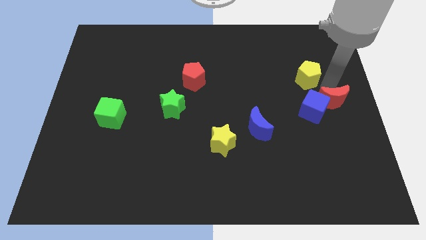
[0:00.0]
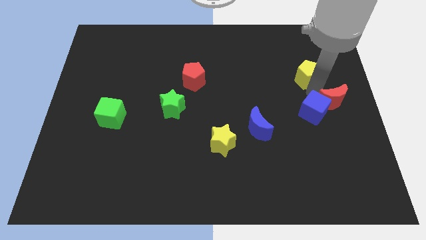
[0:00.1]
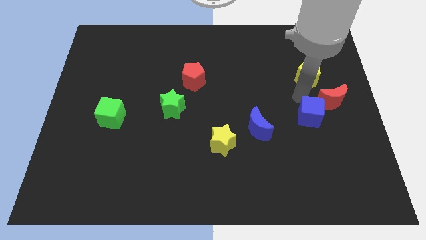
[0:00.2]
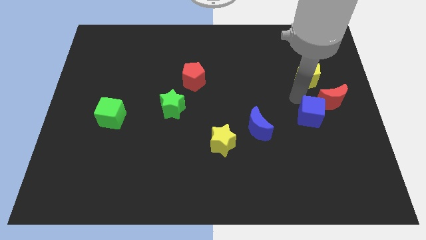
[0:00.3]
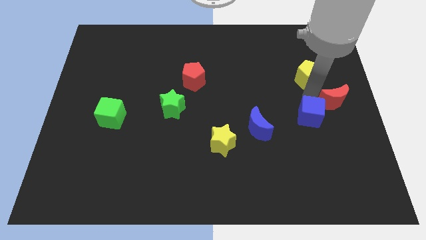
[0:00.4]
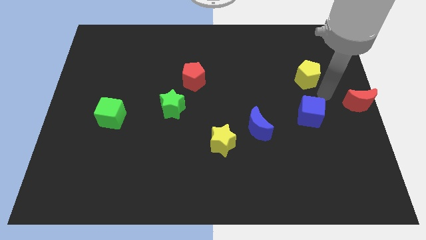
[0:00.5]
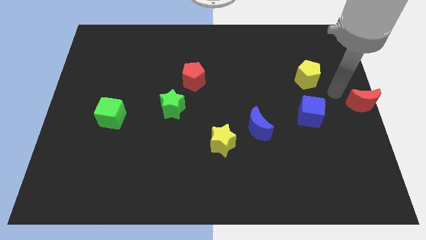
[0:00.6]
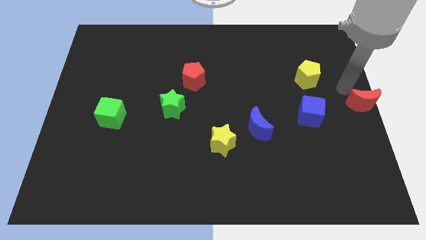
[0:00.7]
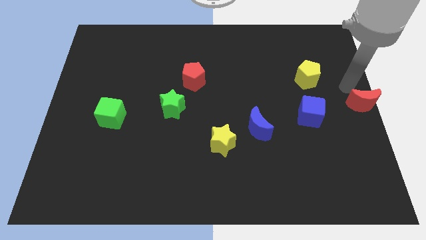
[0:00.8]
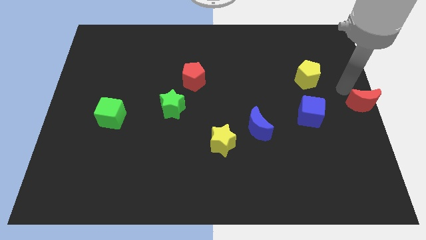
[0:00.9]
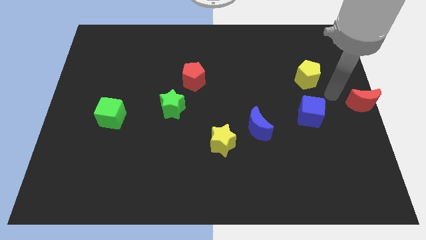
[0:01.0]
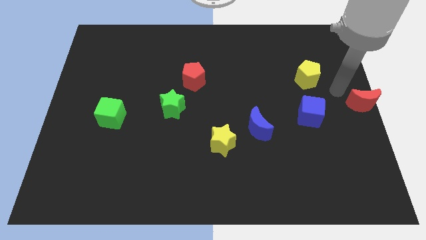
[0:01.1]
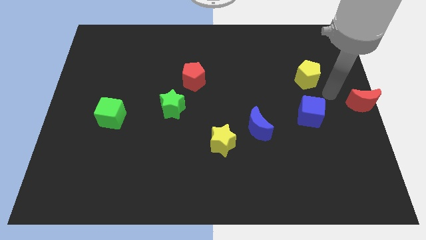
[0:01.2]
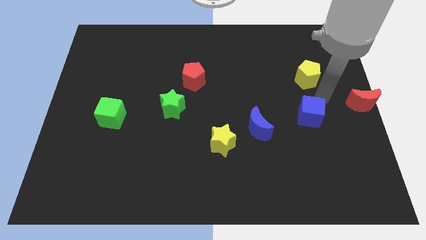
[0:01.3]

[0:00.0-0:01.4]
separate red moon from blue cube

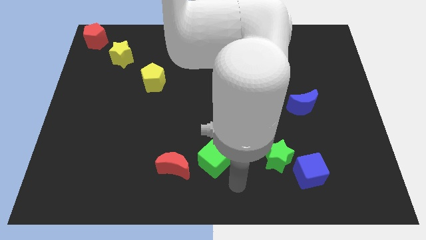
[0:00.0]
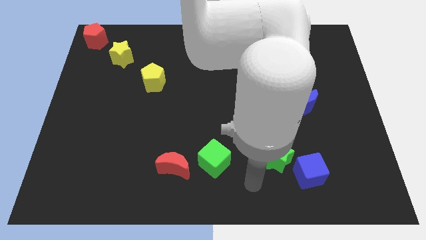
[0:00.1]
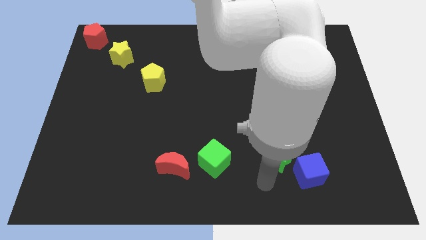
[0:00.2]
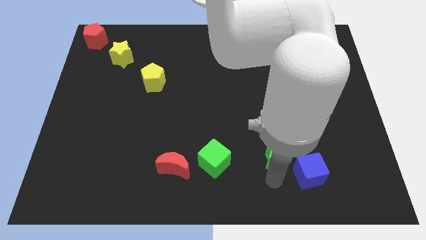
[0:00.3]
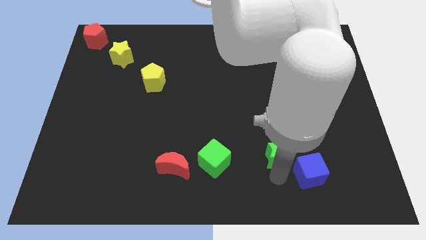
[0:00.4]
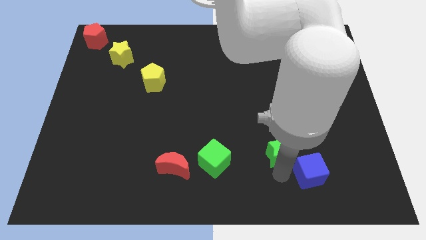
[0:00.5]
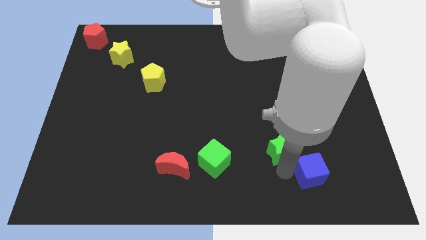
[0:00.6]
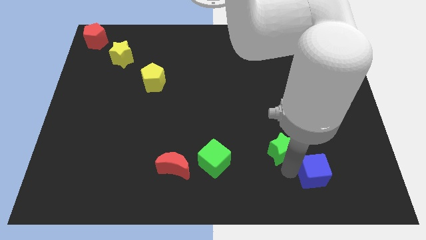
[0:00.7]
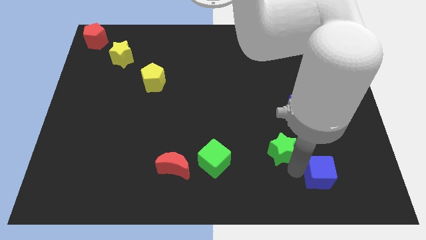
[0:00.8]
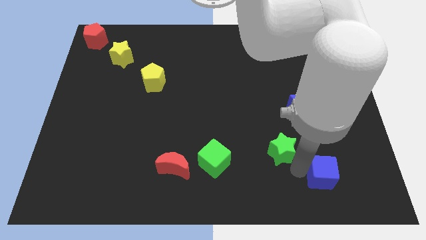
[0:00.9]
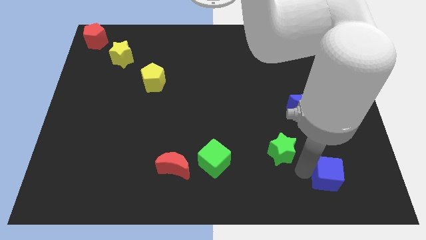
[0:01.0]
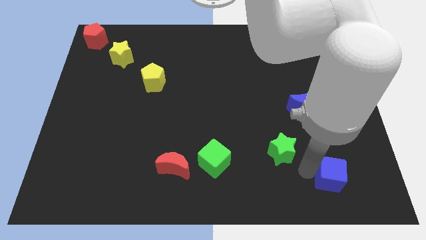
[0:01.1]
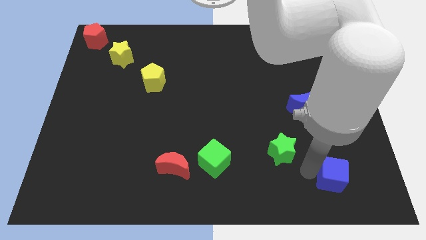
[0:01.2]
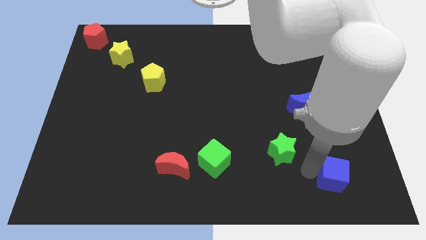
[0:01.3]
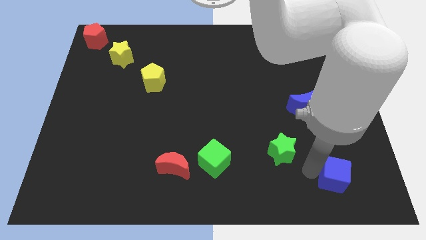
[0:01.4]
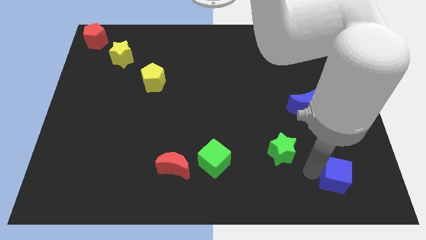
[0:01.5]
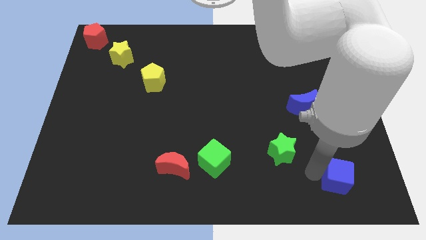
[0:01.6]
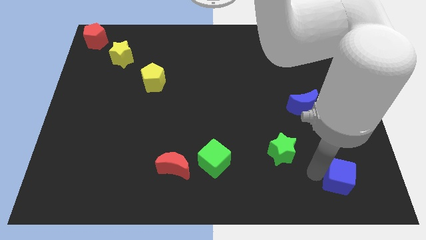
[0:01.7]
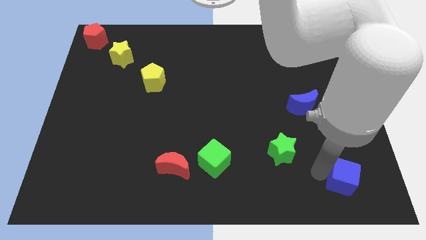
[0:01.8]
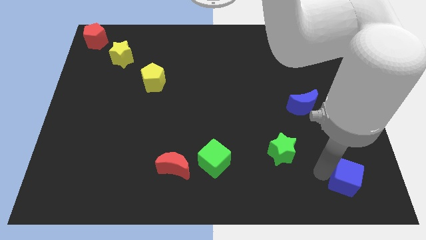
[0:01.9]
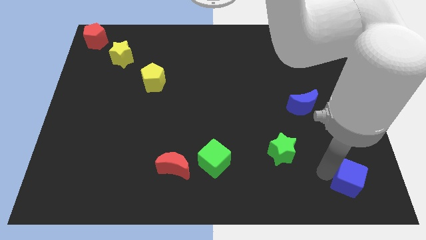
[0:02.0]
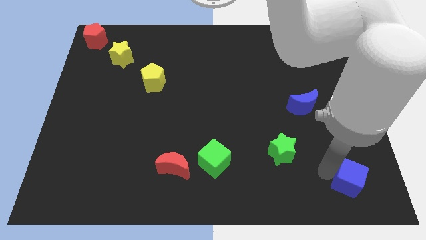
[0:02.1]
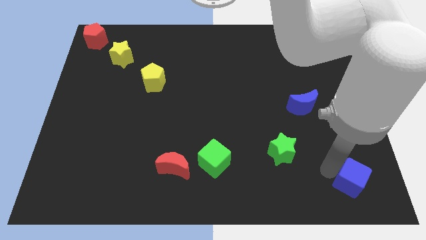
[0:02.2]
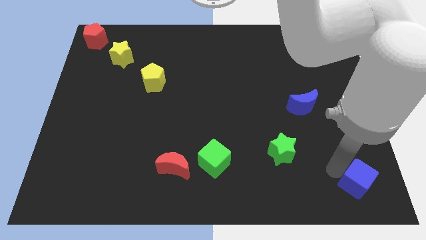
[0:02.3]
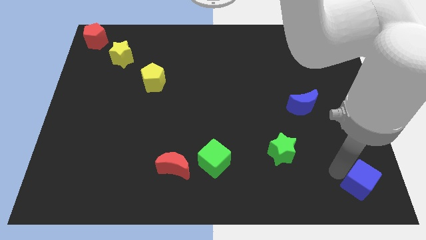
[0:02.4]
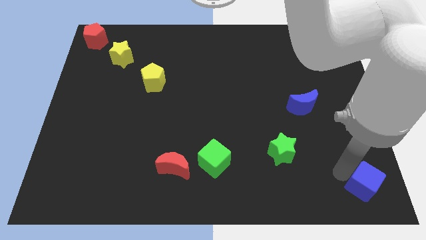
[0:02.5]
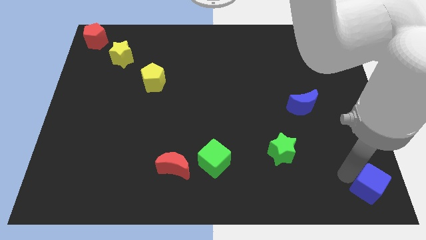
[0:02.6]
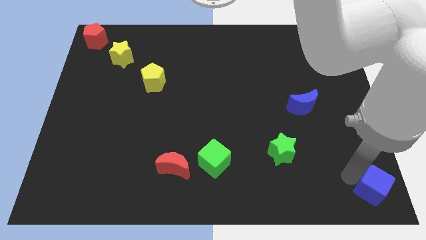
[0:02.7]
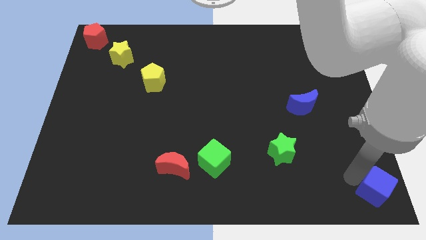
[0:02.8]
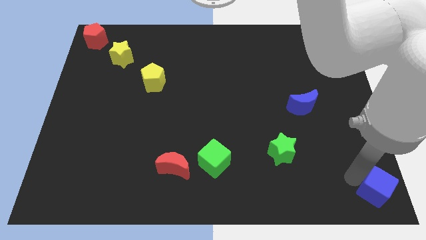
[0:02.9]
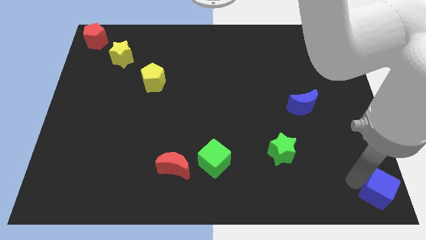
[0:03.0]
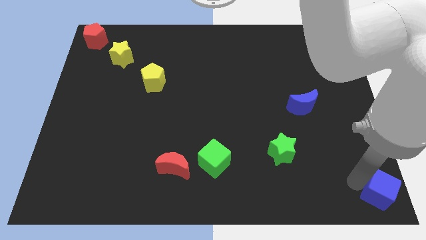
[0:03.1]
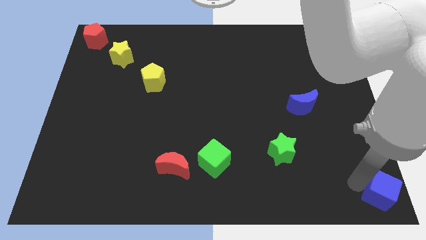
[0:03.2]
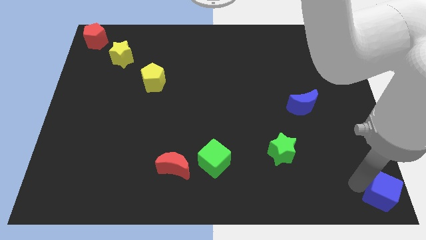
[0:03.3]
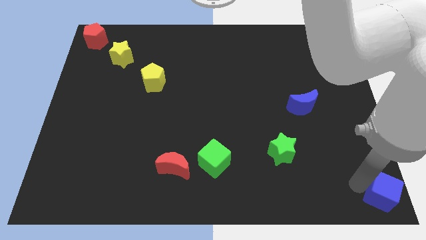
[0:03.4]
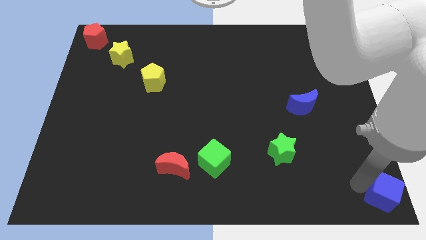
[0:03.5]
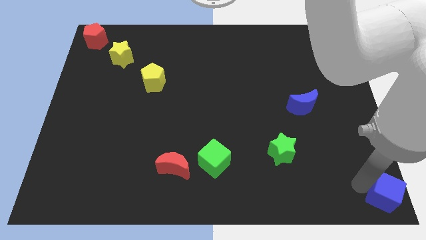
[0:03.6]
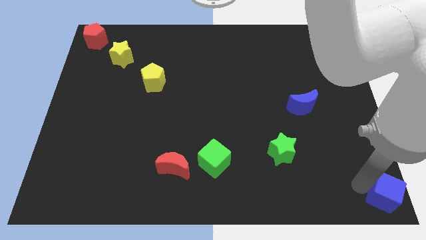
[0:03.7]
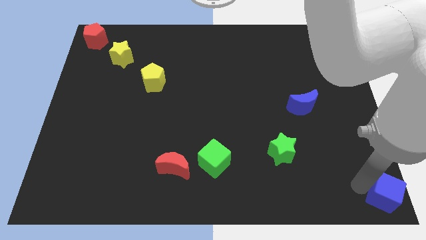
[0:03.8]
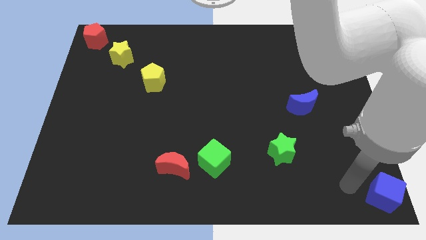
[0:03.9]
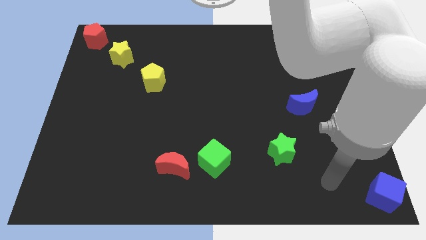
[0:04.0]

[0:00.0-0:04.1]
move blue cube to the bottom right corner of the board

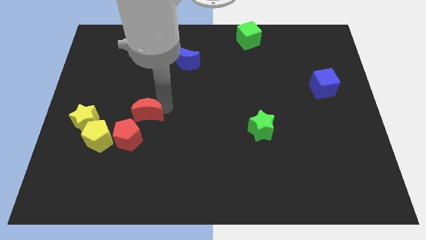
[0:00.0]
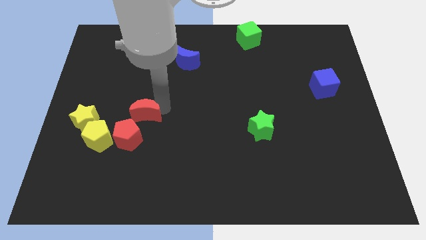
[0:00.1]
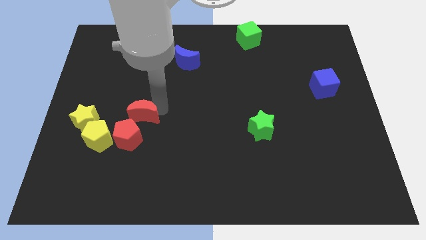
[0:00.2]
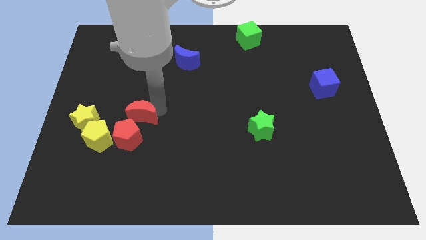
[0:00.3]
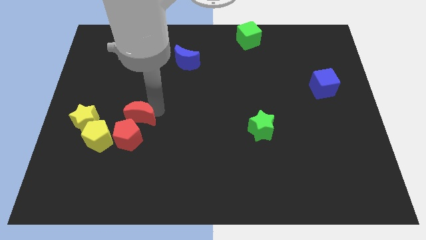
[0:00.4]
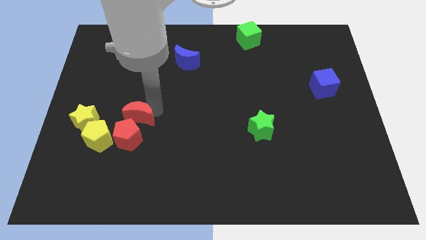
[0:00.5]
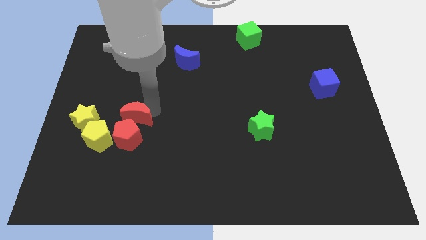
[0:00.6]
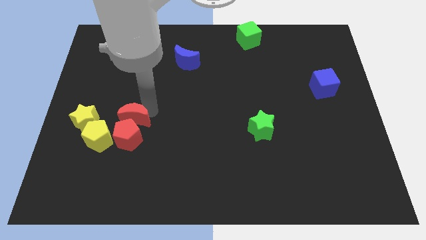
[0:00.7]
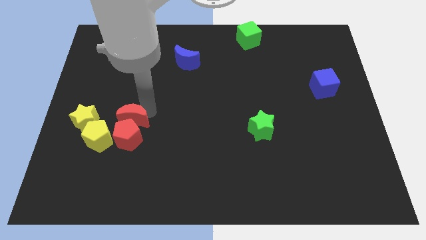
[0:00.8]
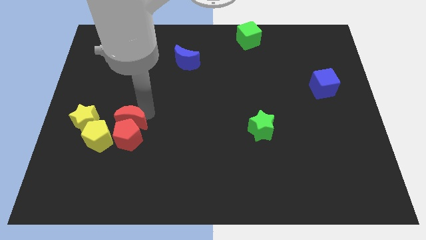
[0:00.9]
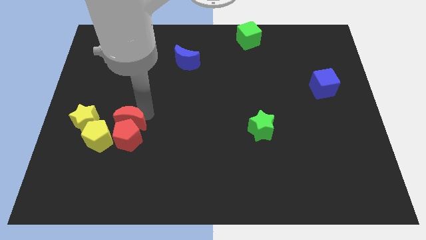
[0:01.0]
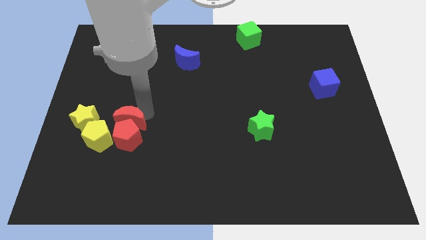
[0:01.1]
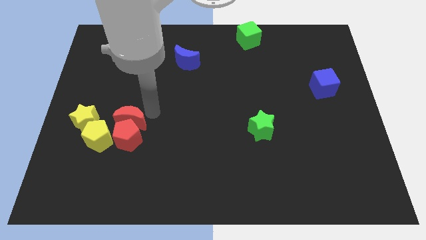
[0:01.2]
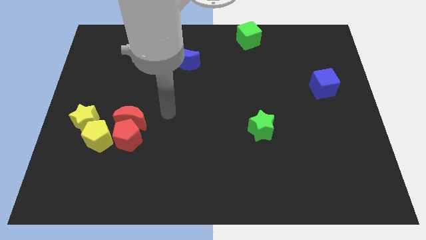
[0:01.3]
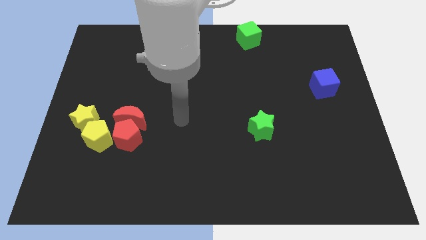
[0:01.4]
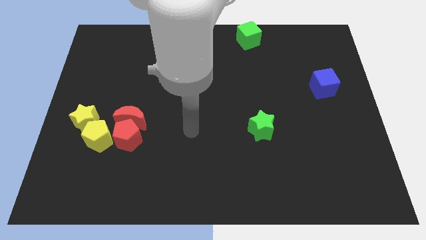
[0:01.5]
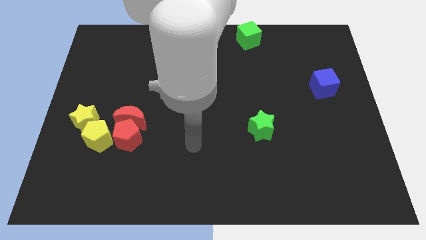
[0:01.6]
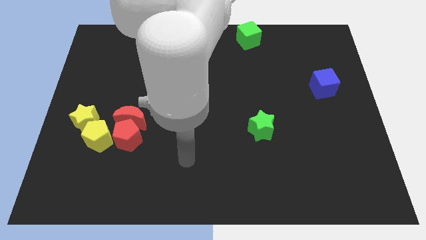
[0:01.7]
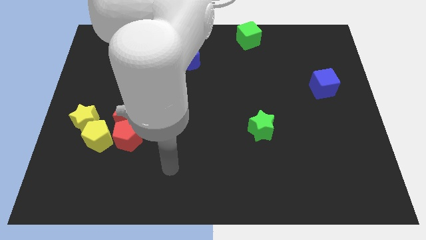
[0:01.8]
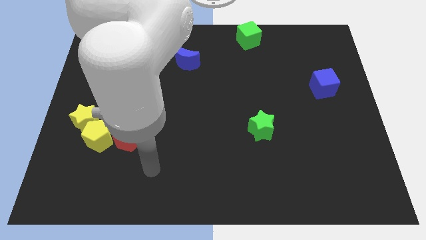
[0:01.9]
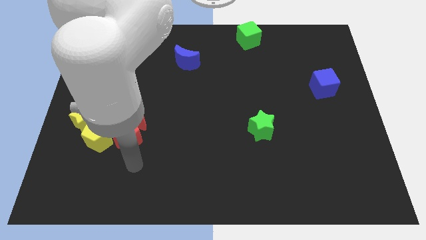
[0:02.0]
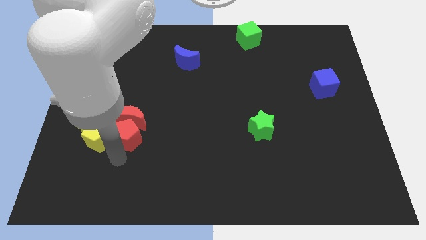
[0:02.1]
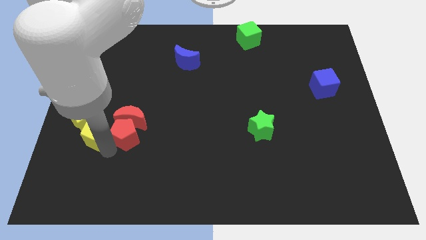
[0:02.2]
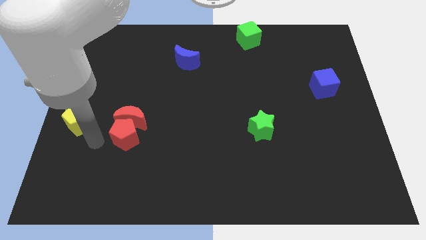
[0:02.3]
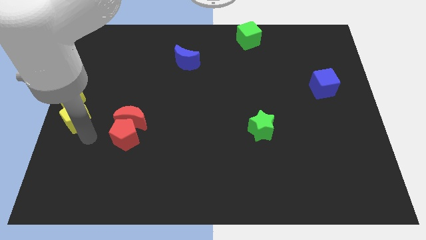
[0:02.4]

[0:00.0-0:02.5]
touch the red pentagon with the red moon

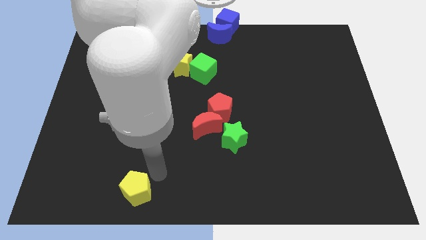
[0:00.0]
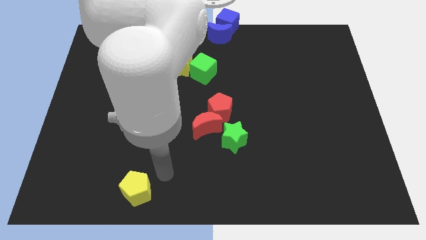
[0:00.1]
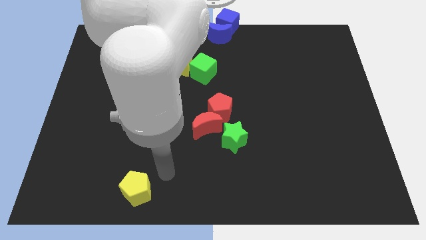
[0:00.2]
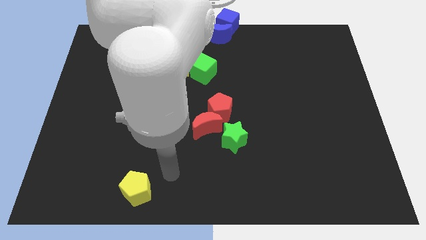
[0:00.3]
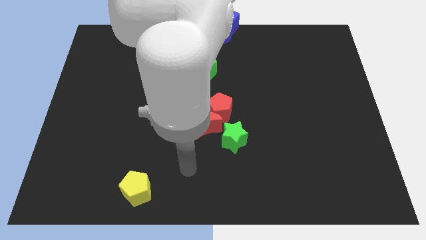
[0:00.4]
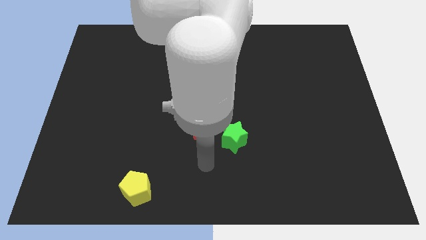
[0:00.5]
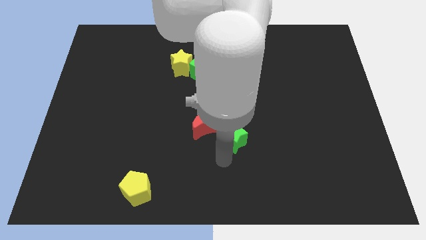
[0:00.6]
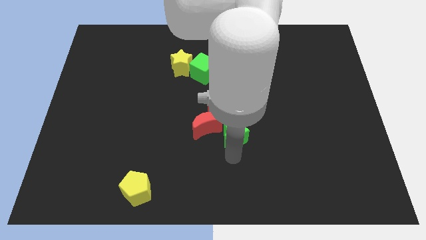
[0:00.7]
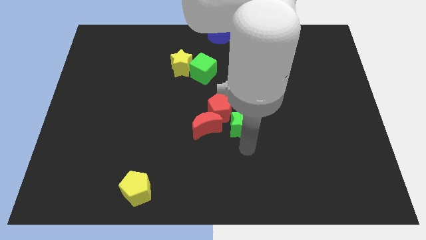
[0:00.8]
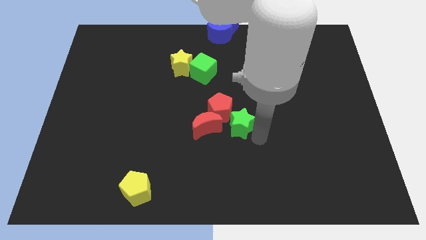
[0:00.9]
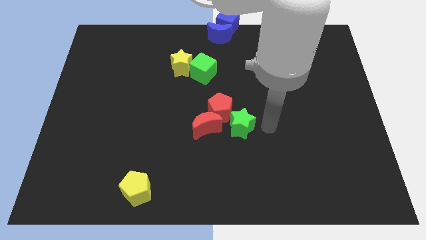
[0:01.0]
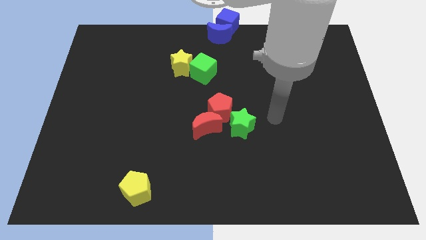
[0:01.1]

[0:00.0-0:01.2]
push the green star upward
